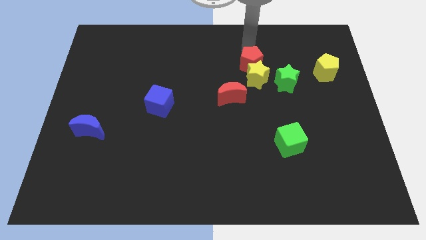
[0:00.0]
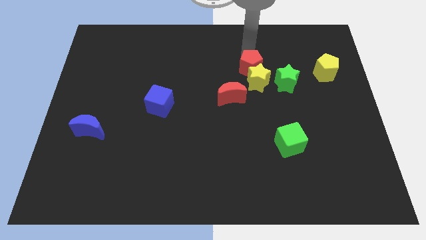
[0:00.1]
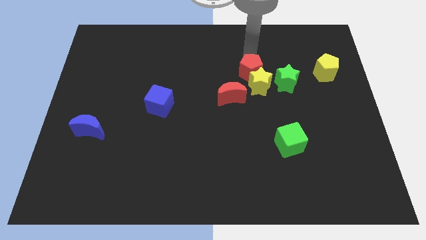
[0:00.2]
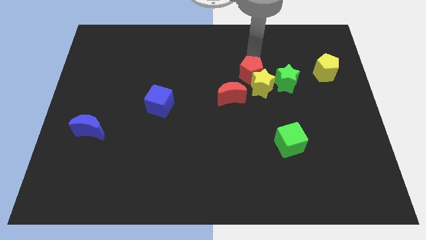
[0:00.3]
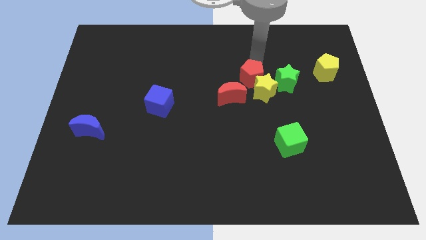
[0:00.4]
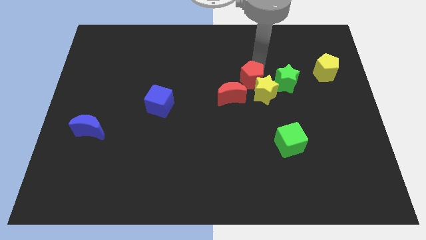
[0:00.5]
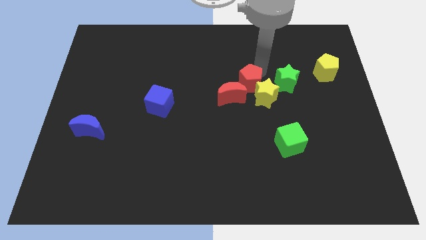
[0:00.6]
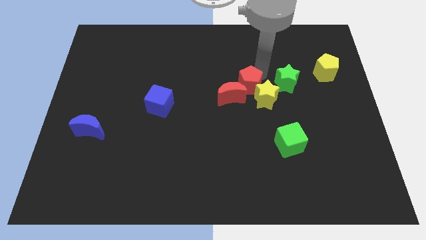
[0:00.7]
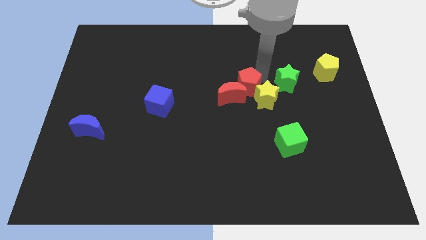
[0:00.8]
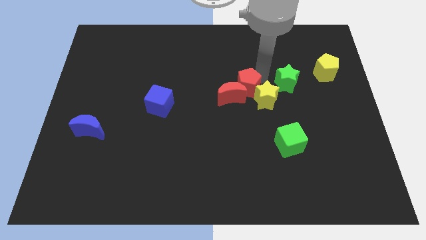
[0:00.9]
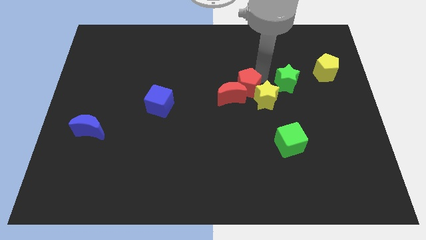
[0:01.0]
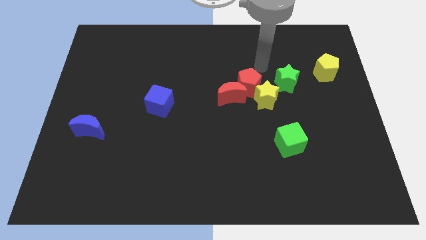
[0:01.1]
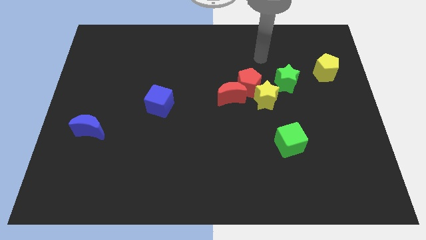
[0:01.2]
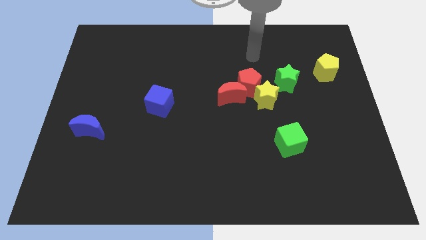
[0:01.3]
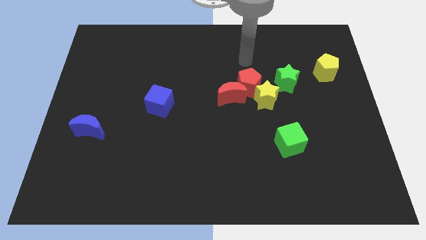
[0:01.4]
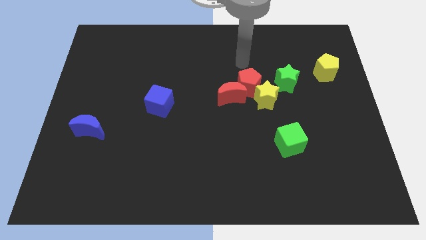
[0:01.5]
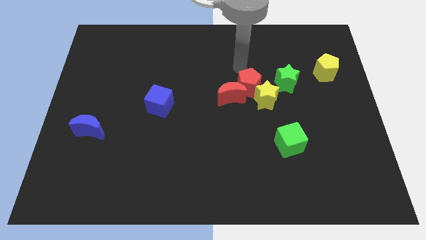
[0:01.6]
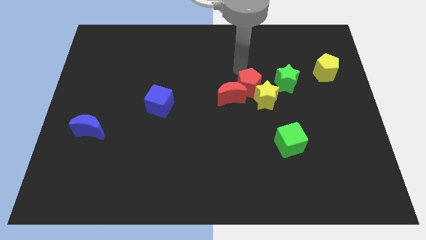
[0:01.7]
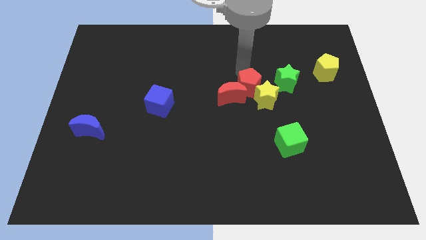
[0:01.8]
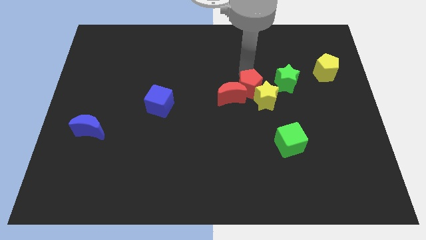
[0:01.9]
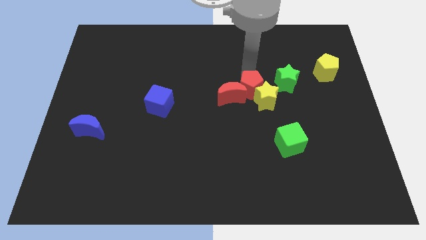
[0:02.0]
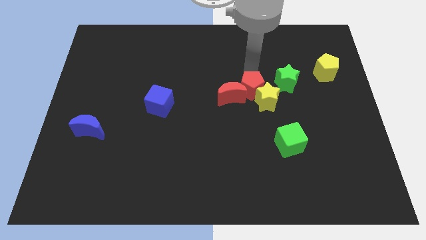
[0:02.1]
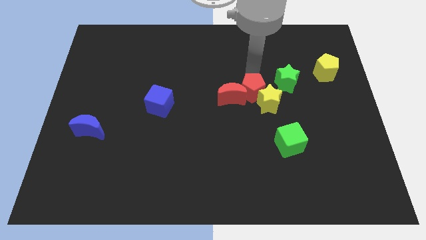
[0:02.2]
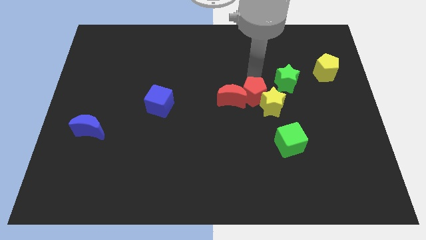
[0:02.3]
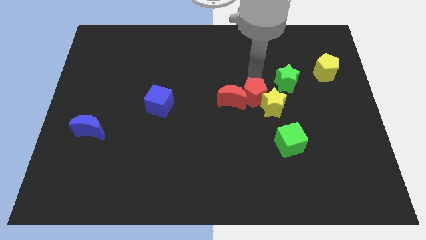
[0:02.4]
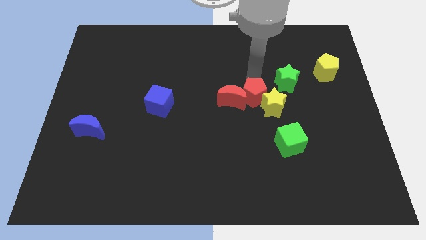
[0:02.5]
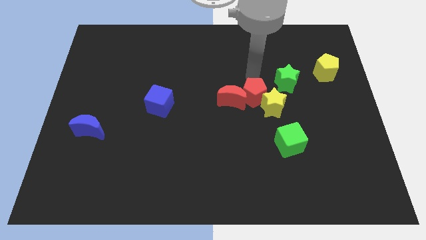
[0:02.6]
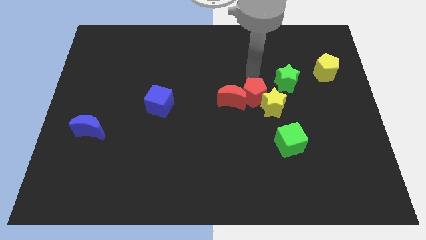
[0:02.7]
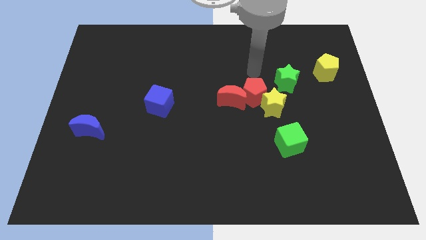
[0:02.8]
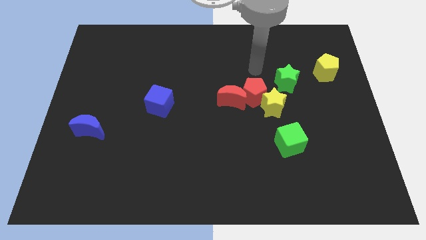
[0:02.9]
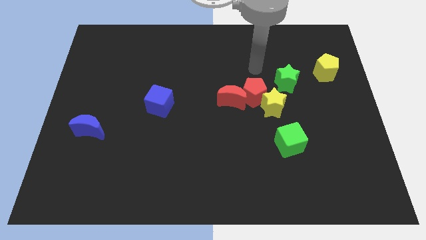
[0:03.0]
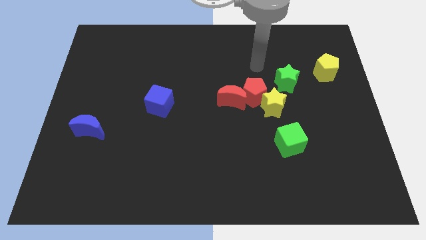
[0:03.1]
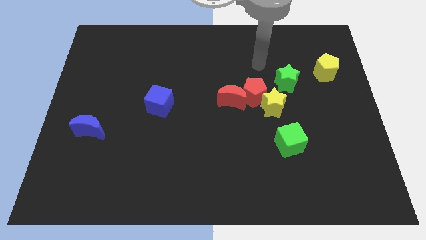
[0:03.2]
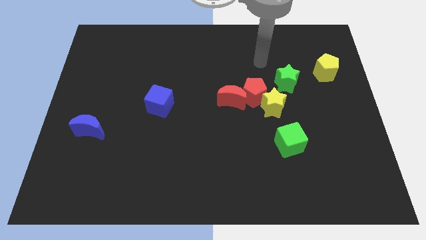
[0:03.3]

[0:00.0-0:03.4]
move the red pentagon and yellow star slightly down

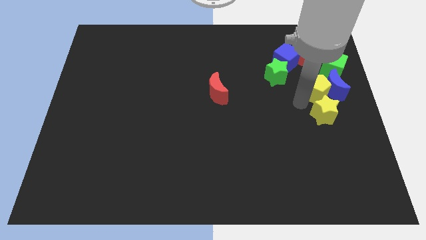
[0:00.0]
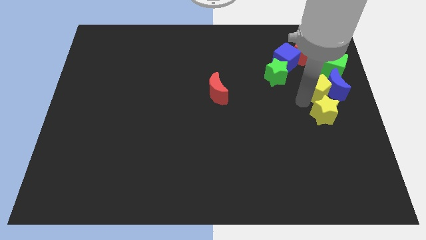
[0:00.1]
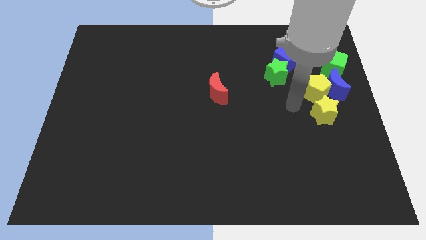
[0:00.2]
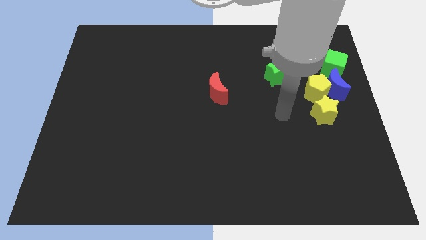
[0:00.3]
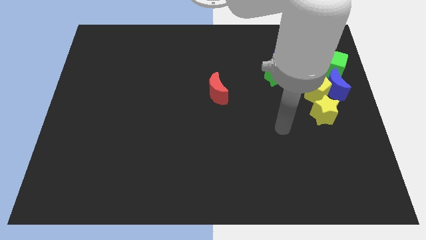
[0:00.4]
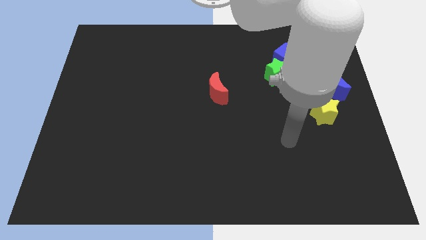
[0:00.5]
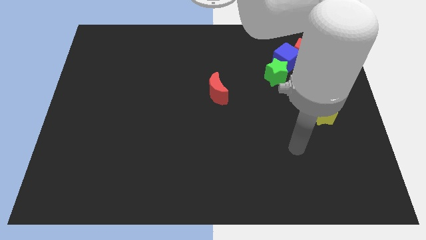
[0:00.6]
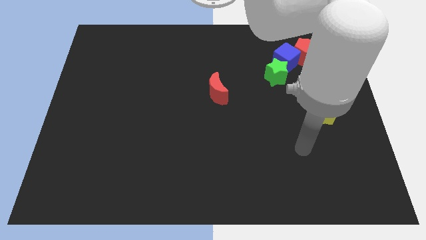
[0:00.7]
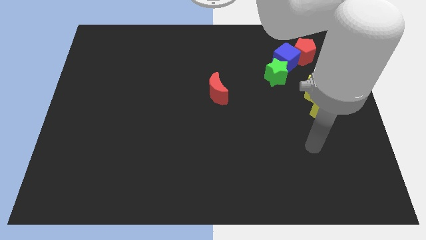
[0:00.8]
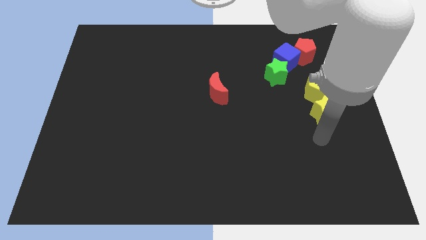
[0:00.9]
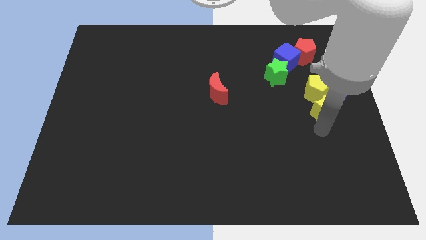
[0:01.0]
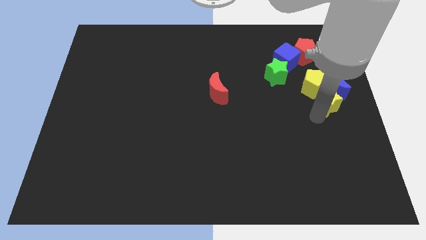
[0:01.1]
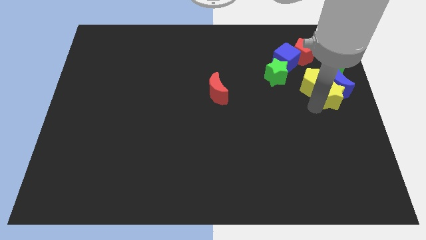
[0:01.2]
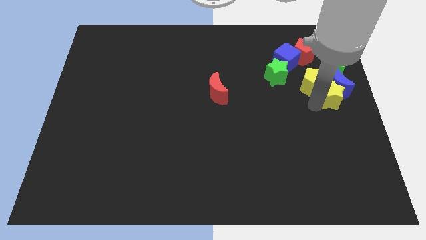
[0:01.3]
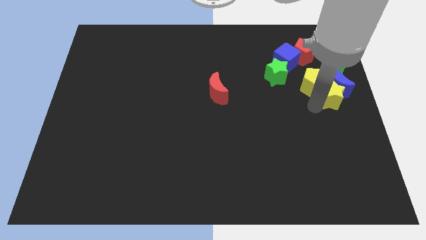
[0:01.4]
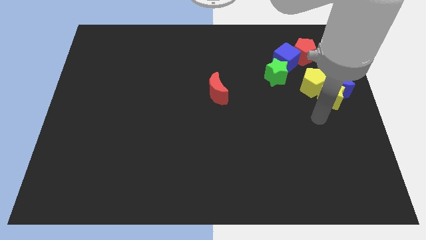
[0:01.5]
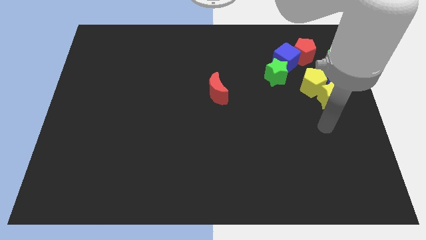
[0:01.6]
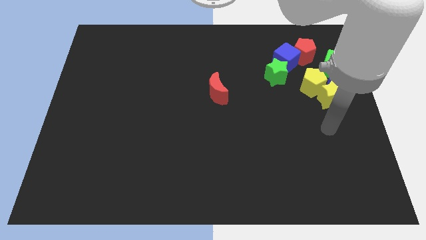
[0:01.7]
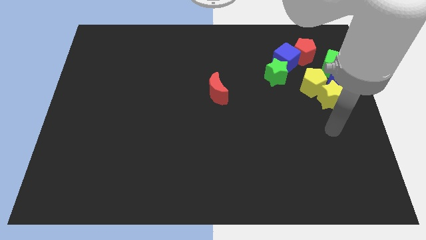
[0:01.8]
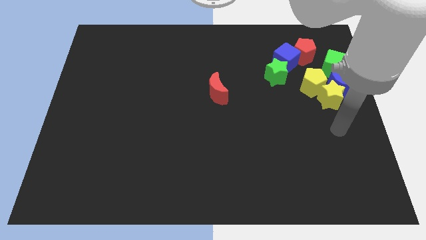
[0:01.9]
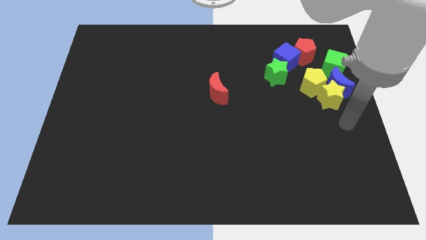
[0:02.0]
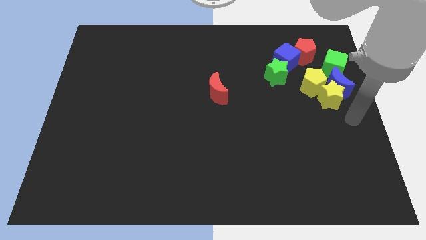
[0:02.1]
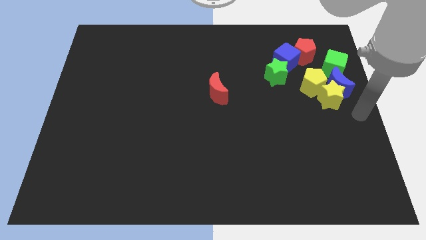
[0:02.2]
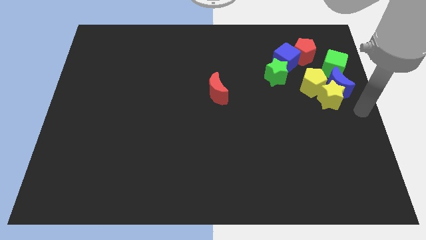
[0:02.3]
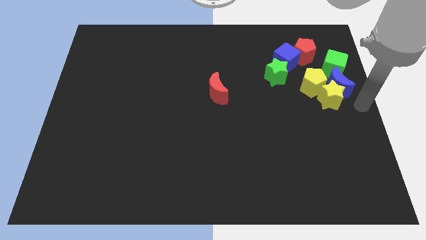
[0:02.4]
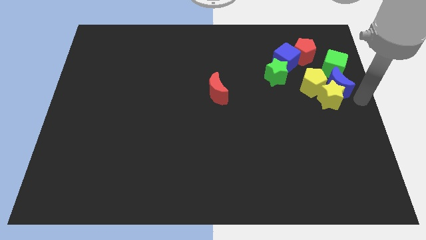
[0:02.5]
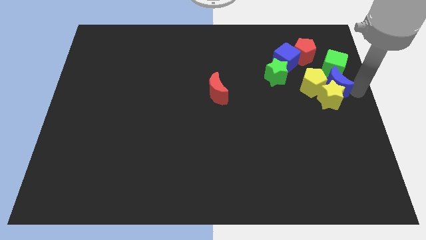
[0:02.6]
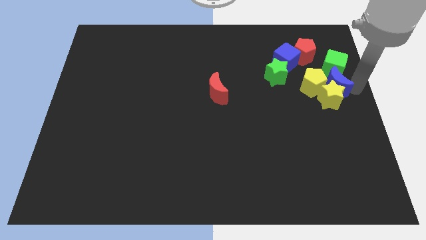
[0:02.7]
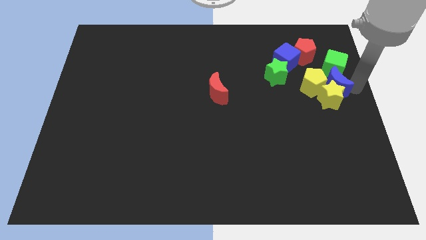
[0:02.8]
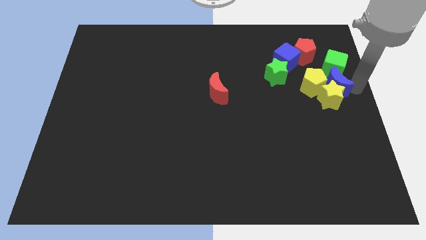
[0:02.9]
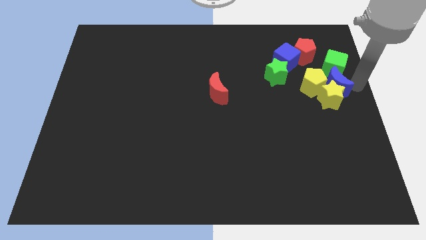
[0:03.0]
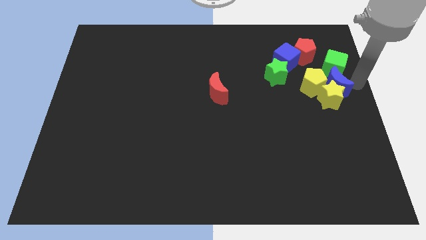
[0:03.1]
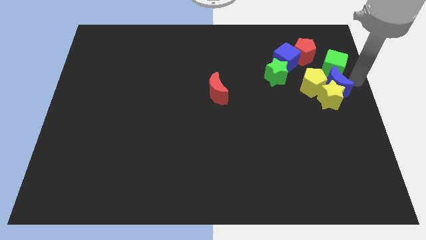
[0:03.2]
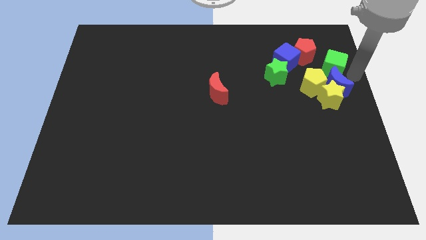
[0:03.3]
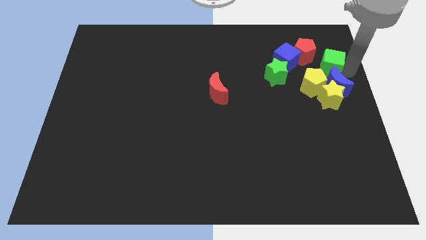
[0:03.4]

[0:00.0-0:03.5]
slightly push yellow star and yellow pentagon towards top

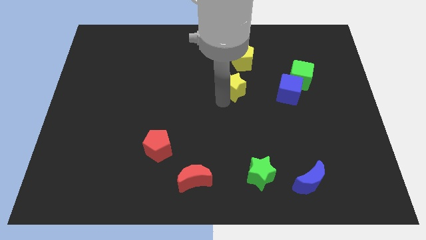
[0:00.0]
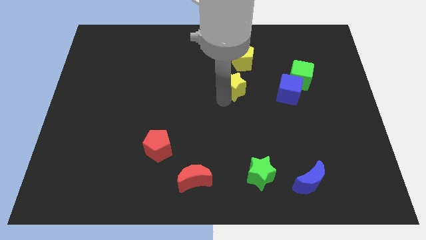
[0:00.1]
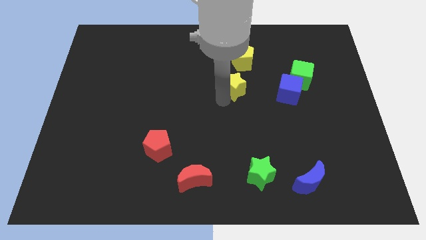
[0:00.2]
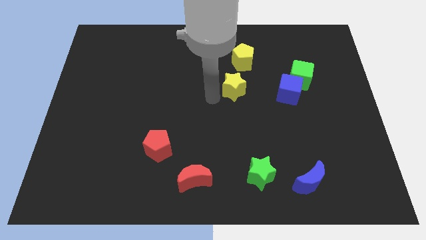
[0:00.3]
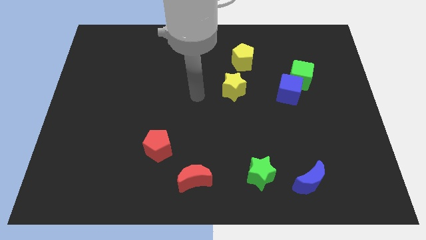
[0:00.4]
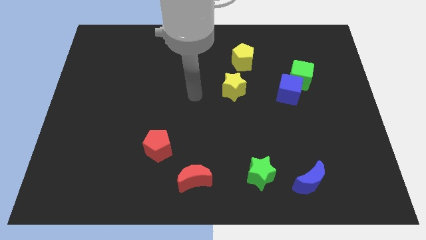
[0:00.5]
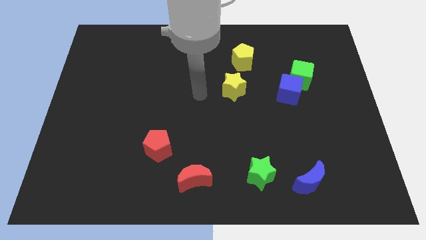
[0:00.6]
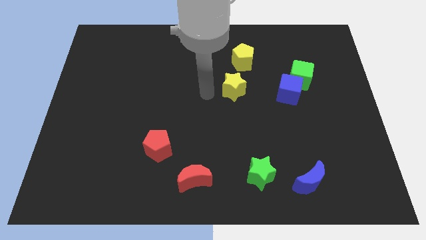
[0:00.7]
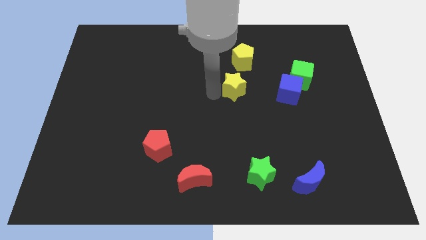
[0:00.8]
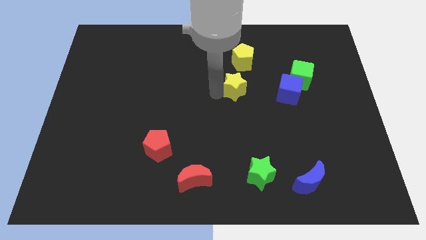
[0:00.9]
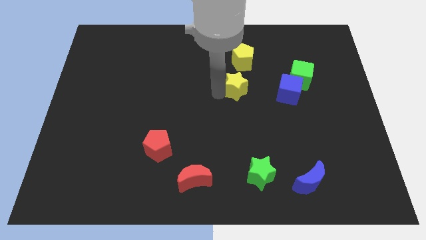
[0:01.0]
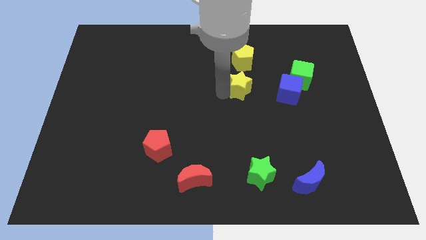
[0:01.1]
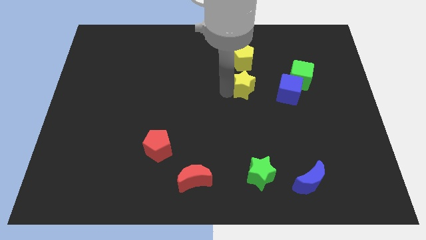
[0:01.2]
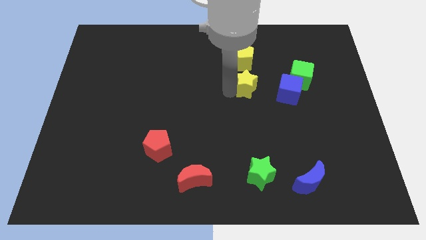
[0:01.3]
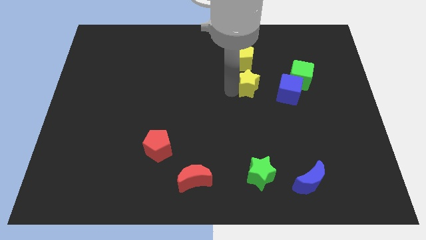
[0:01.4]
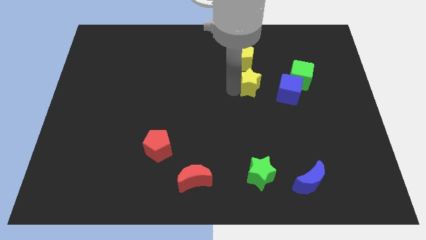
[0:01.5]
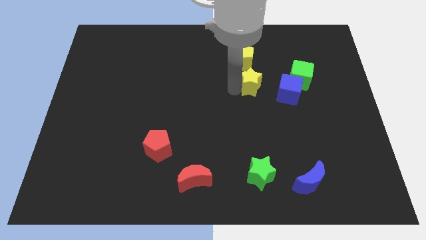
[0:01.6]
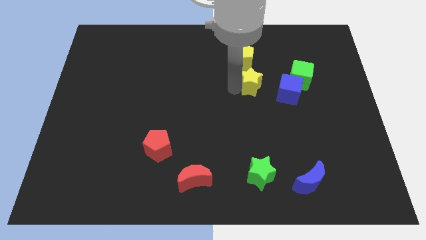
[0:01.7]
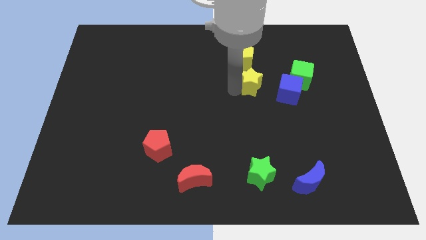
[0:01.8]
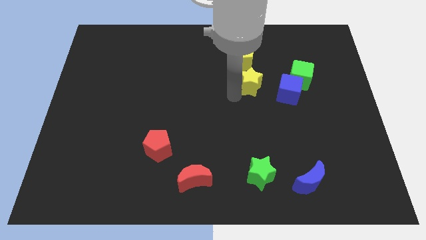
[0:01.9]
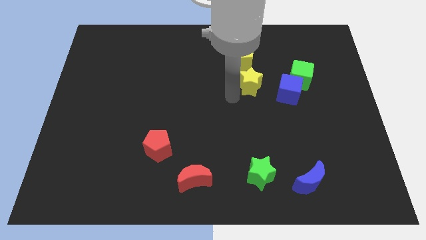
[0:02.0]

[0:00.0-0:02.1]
push yellow star close to yellow pentagon
